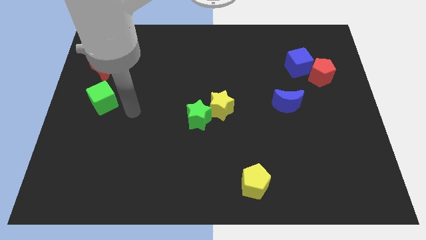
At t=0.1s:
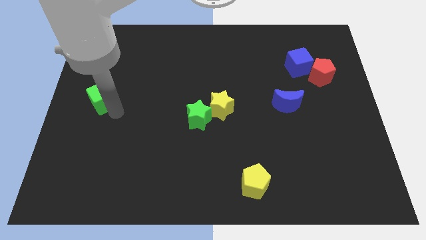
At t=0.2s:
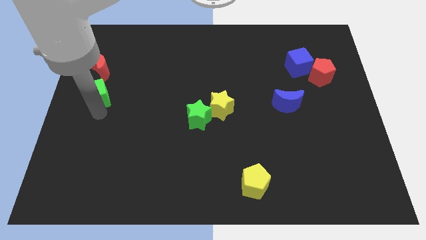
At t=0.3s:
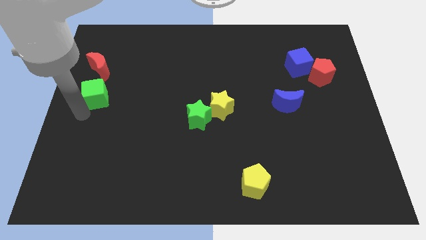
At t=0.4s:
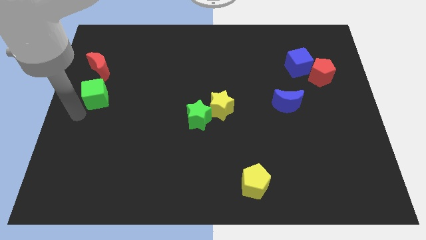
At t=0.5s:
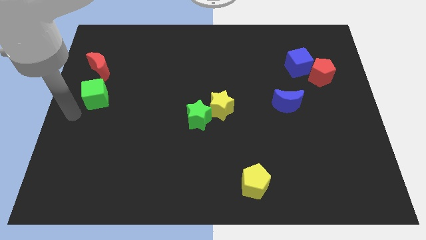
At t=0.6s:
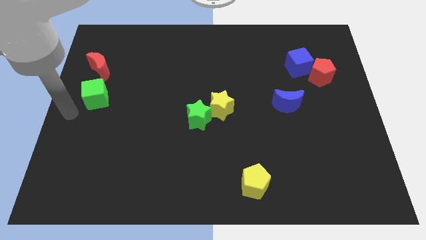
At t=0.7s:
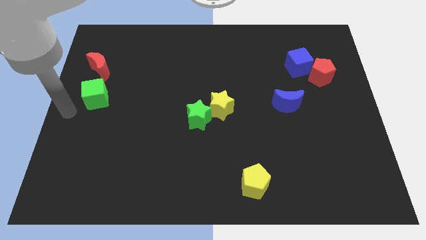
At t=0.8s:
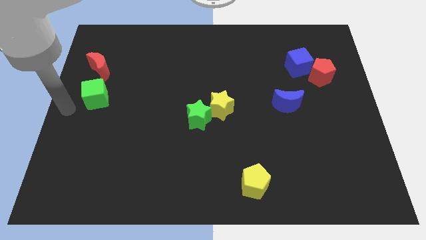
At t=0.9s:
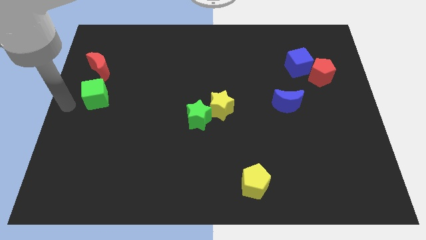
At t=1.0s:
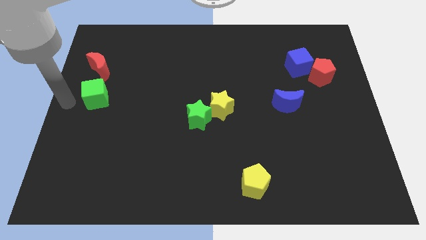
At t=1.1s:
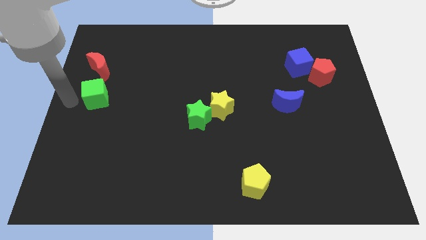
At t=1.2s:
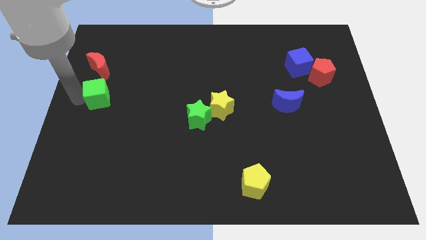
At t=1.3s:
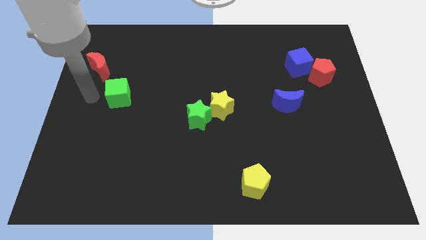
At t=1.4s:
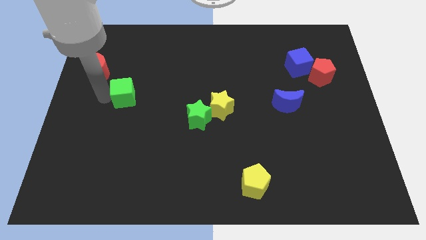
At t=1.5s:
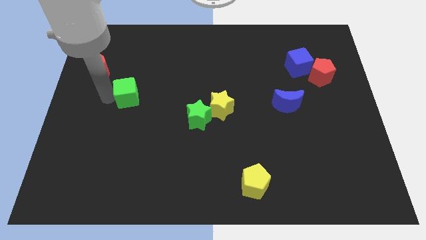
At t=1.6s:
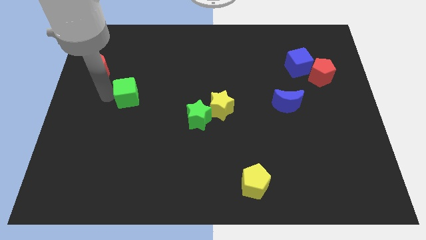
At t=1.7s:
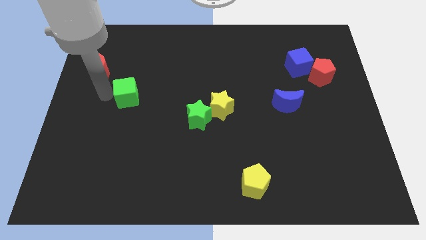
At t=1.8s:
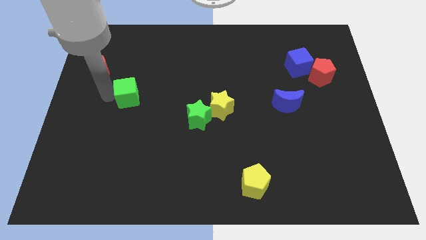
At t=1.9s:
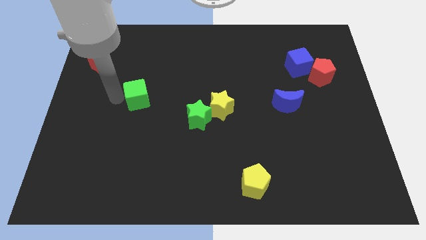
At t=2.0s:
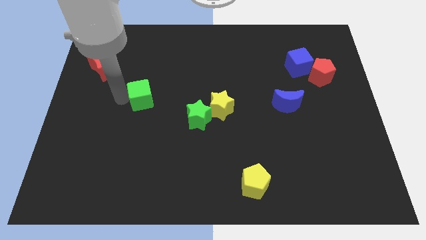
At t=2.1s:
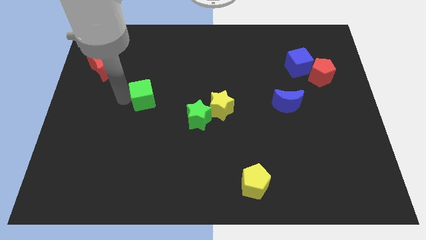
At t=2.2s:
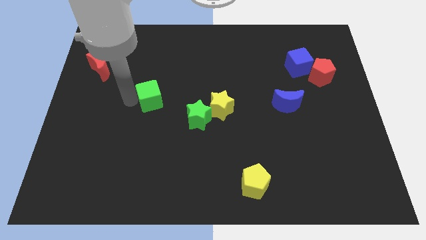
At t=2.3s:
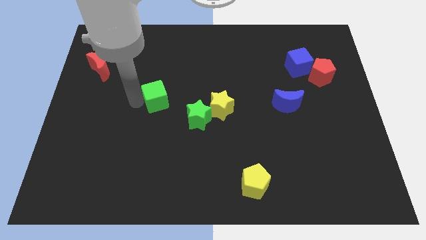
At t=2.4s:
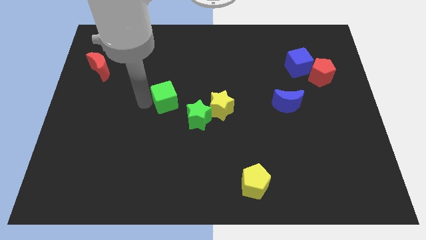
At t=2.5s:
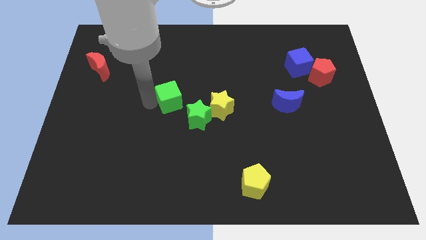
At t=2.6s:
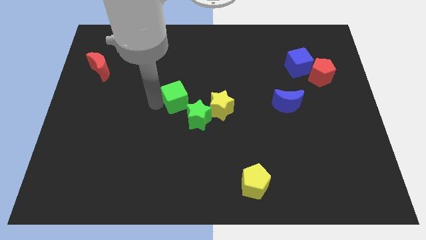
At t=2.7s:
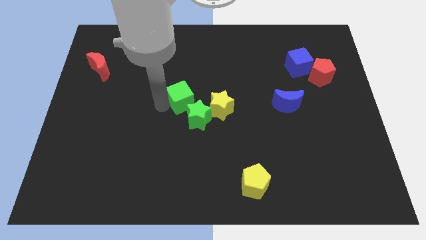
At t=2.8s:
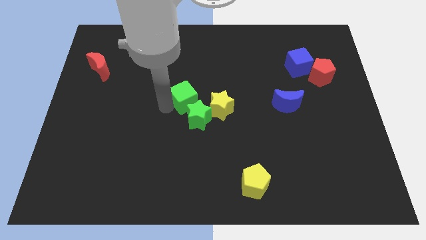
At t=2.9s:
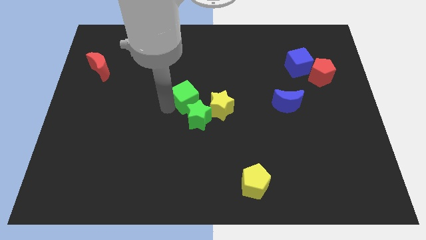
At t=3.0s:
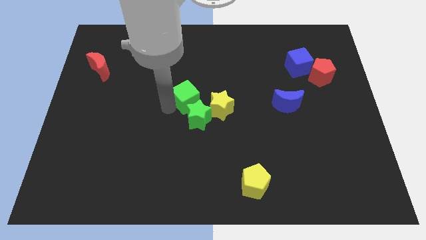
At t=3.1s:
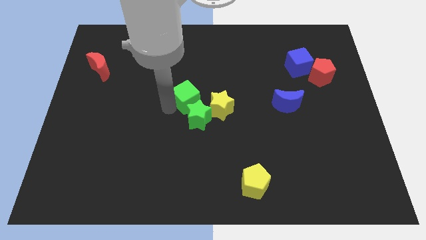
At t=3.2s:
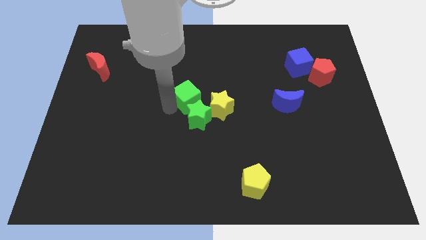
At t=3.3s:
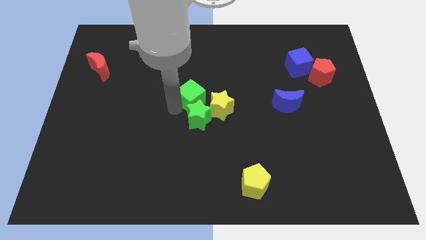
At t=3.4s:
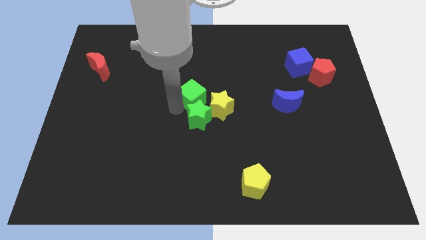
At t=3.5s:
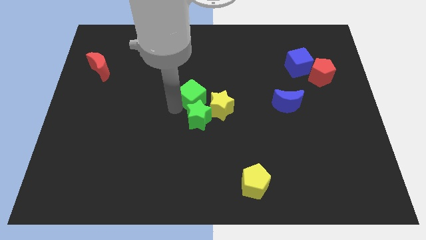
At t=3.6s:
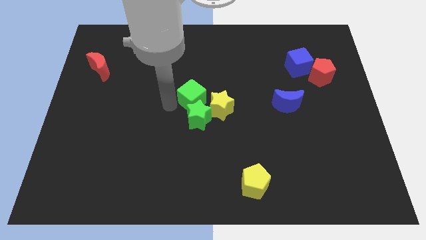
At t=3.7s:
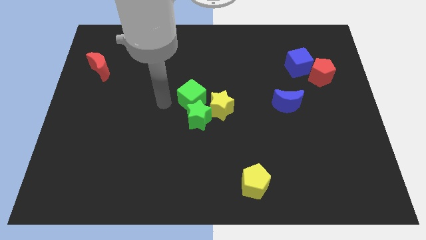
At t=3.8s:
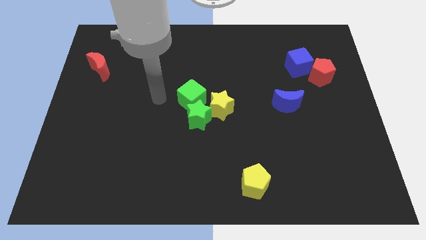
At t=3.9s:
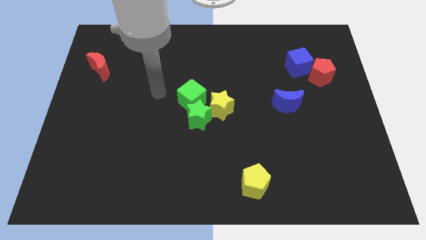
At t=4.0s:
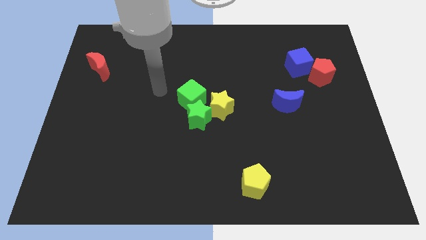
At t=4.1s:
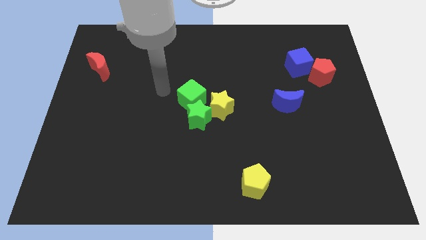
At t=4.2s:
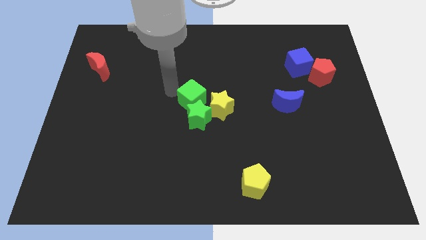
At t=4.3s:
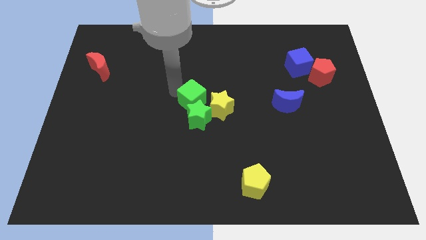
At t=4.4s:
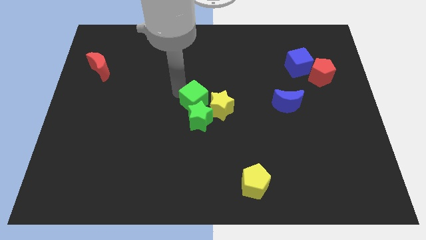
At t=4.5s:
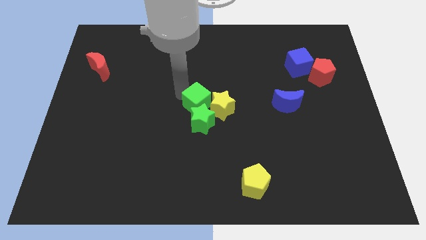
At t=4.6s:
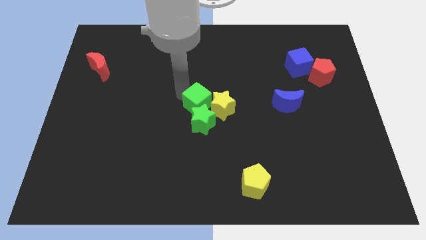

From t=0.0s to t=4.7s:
move the green cube into the green star

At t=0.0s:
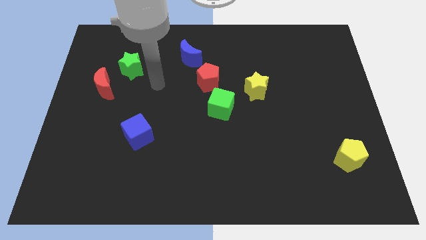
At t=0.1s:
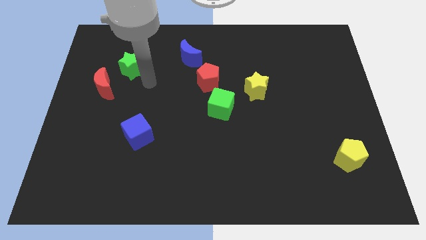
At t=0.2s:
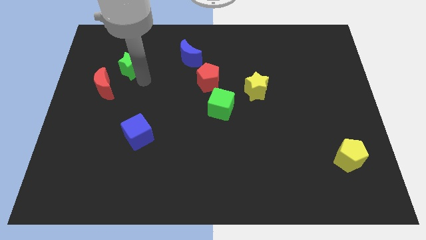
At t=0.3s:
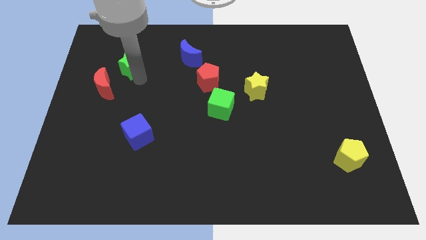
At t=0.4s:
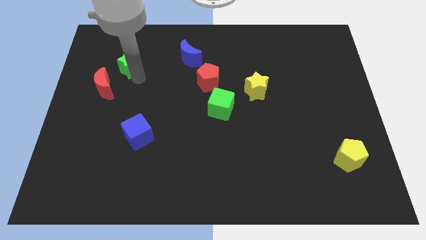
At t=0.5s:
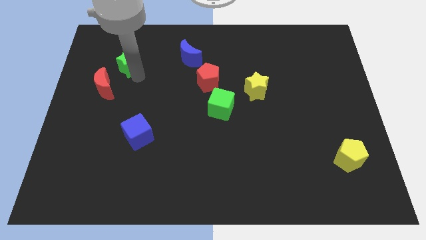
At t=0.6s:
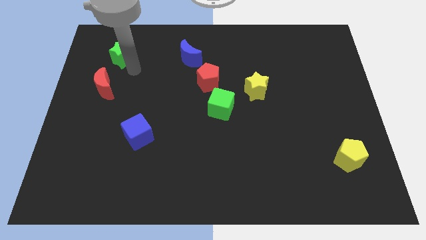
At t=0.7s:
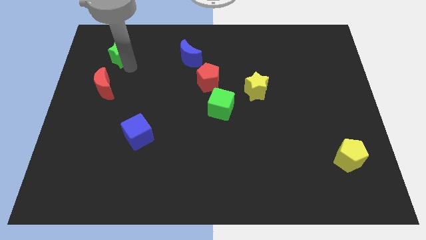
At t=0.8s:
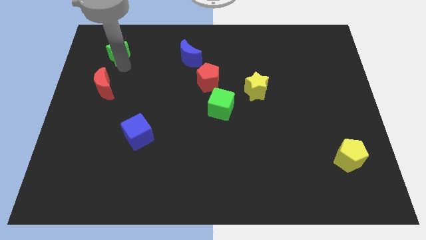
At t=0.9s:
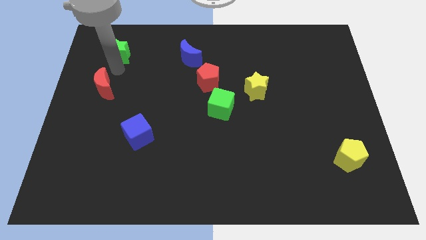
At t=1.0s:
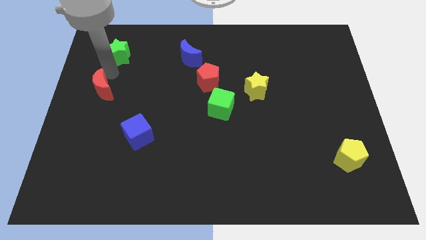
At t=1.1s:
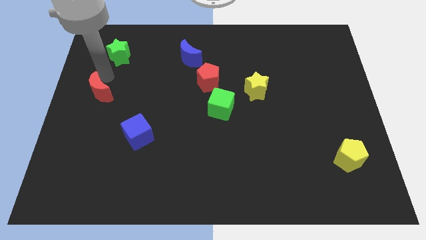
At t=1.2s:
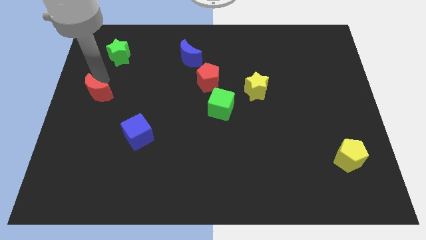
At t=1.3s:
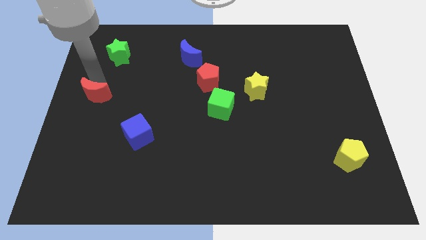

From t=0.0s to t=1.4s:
move the green star to the left top

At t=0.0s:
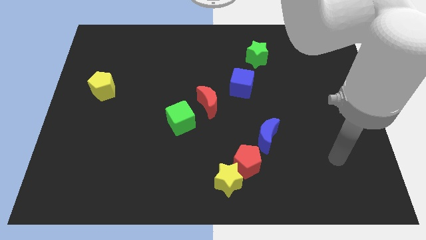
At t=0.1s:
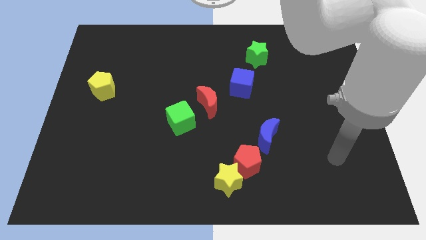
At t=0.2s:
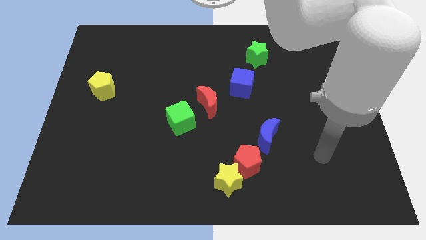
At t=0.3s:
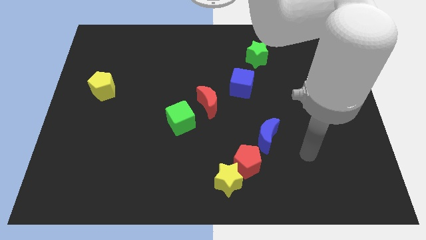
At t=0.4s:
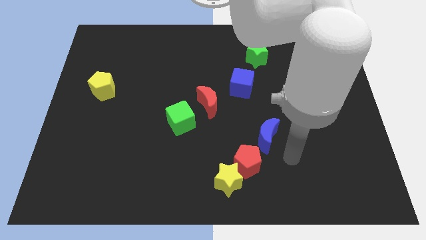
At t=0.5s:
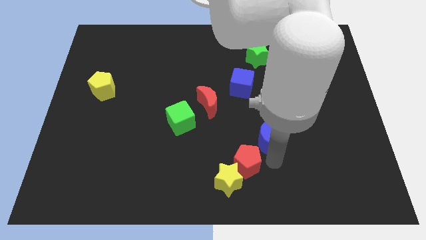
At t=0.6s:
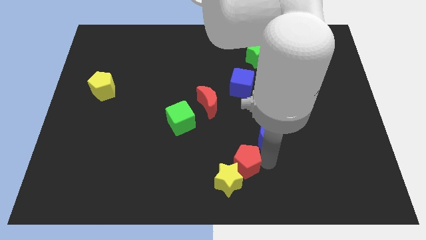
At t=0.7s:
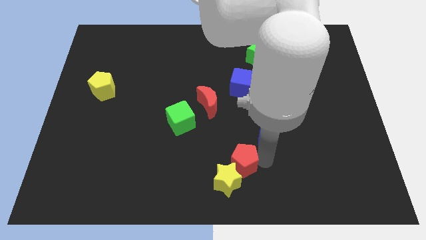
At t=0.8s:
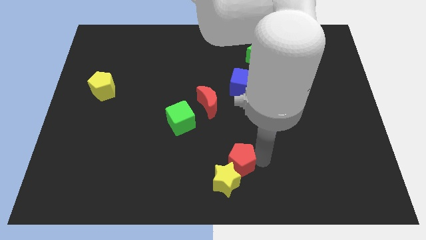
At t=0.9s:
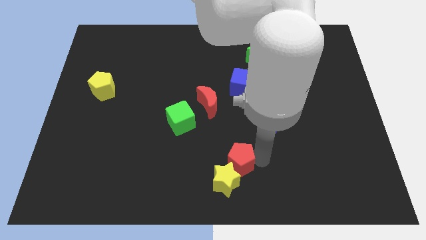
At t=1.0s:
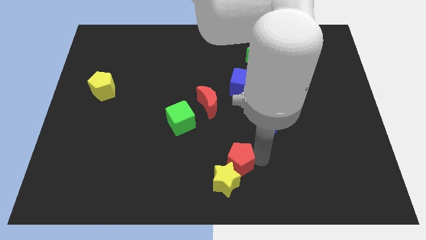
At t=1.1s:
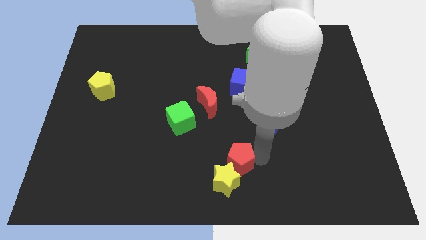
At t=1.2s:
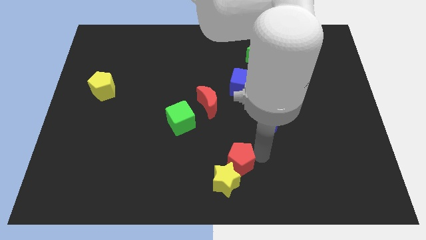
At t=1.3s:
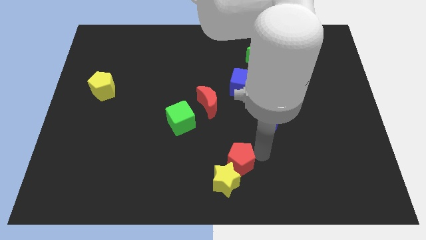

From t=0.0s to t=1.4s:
touch the red pentagon

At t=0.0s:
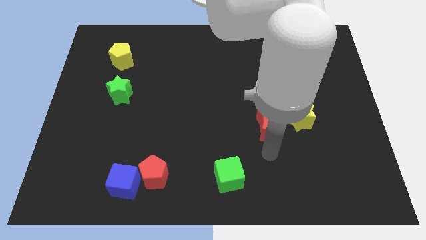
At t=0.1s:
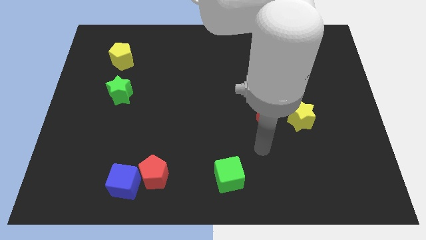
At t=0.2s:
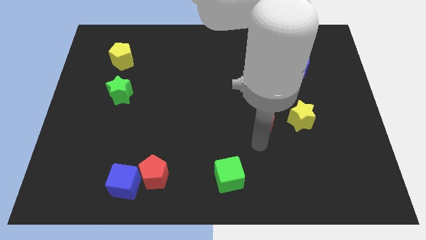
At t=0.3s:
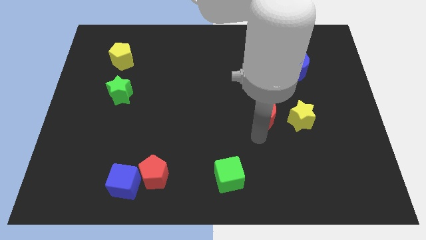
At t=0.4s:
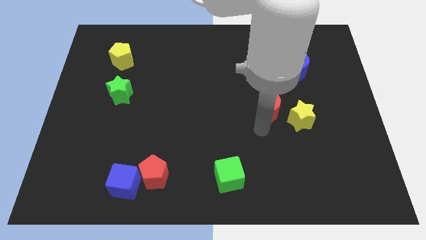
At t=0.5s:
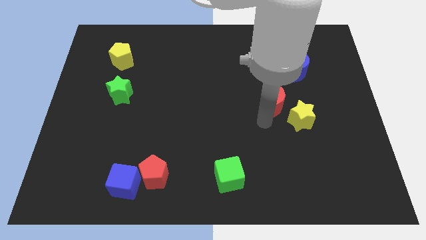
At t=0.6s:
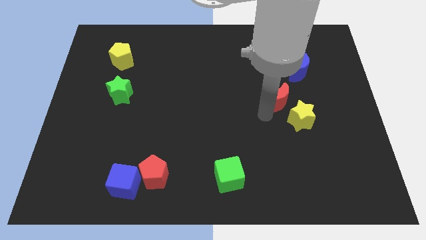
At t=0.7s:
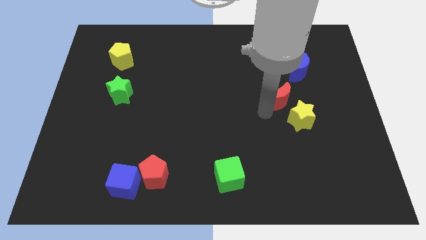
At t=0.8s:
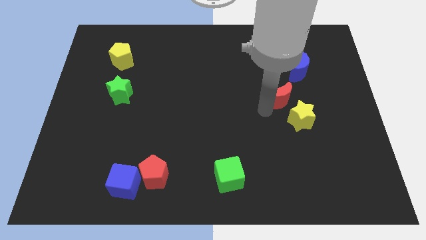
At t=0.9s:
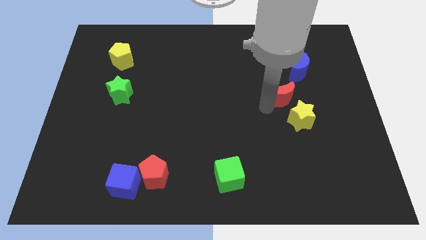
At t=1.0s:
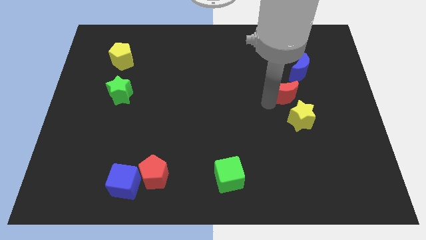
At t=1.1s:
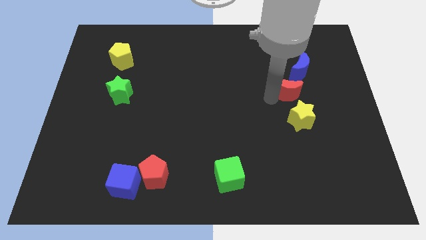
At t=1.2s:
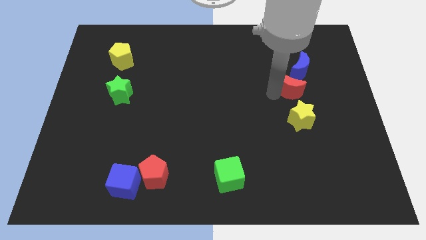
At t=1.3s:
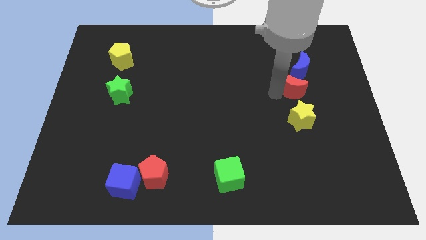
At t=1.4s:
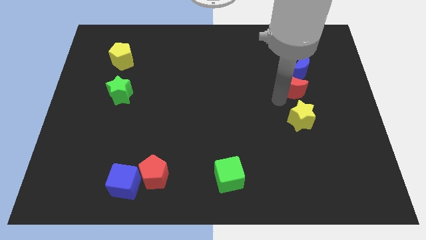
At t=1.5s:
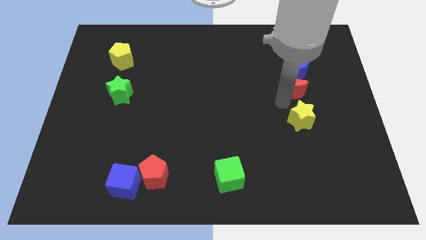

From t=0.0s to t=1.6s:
place the red moon down to the blue moon
